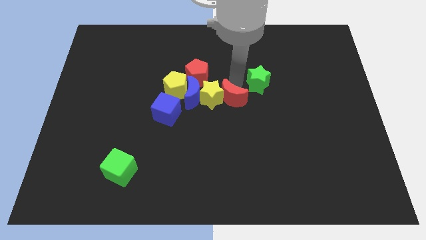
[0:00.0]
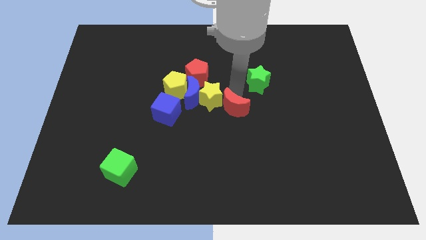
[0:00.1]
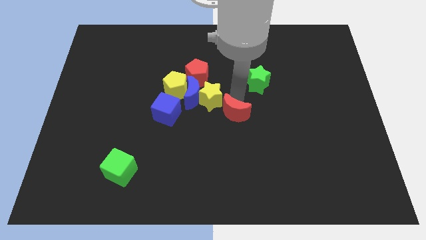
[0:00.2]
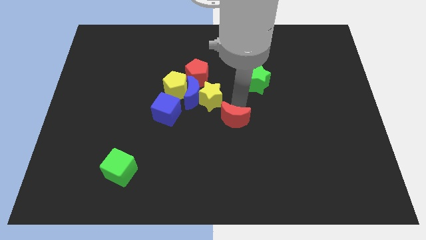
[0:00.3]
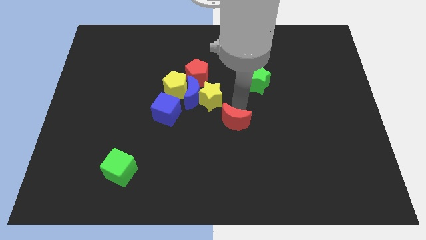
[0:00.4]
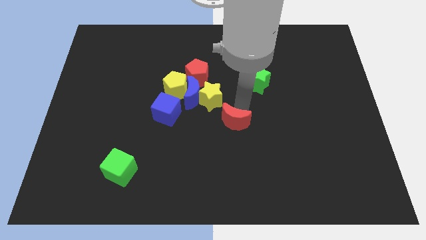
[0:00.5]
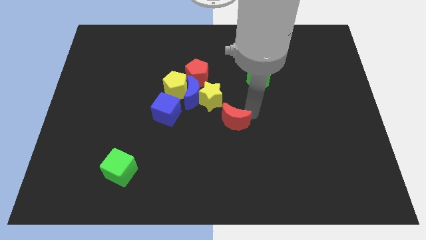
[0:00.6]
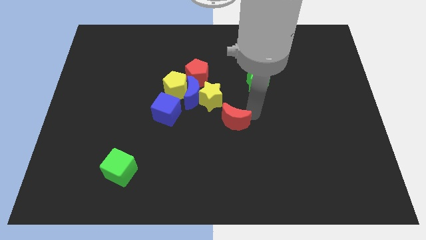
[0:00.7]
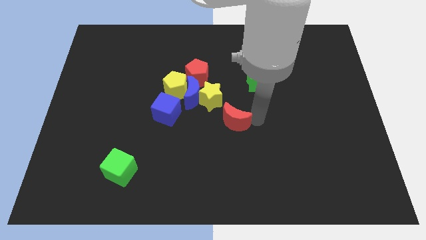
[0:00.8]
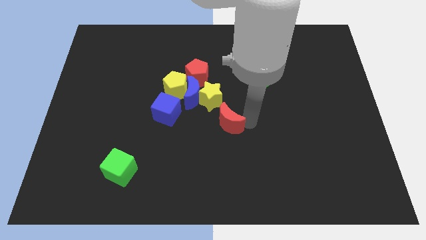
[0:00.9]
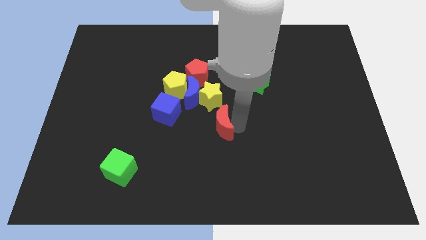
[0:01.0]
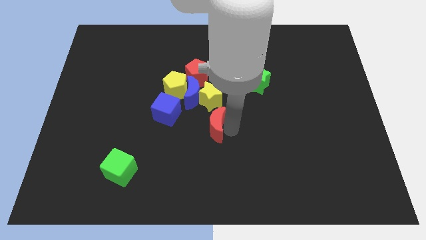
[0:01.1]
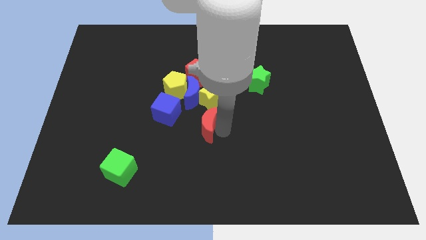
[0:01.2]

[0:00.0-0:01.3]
move the red moon to the bottom side of the yellow star

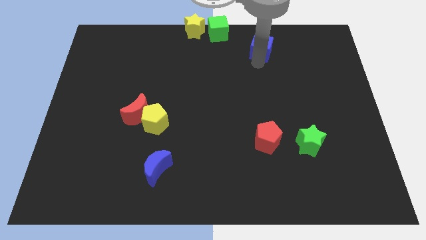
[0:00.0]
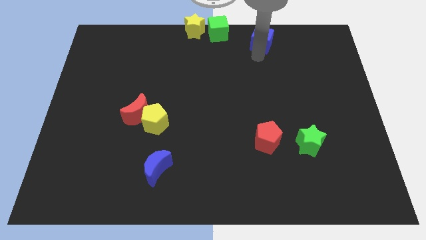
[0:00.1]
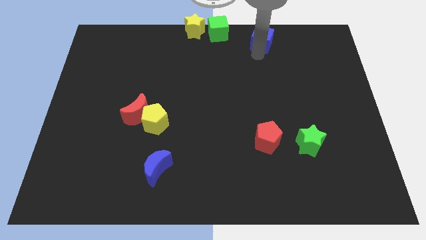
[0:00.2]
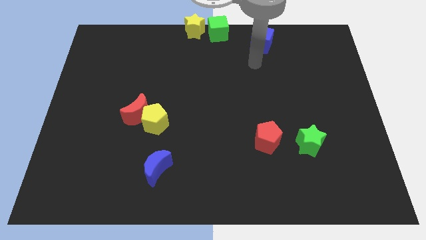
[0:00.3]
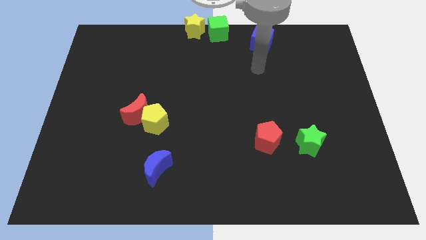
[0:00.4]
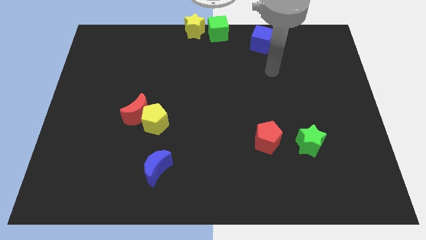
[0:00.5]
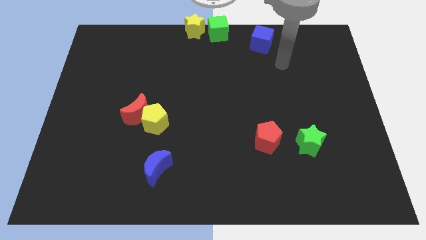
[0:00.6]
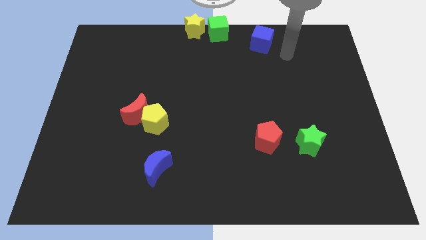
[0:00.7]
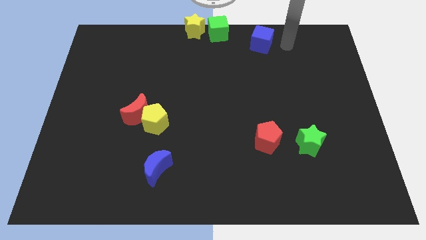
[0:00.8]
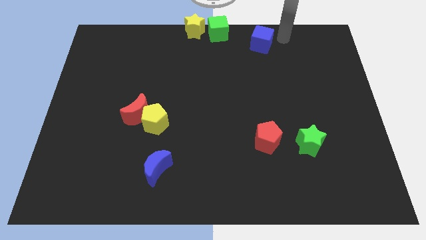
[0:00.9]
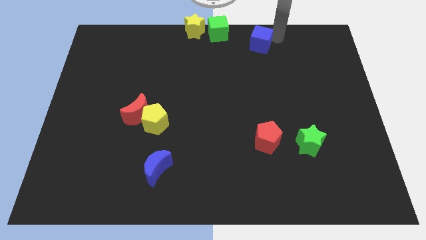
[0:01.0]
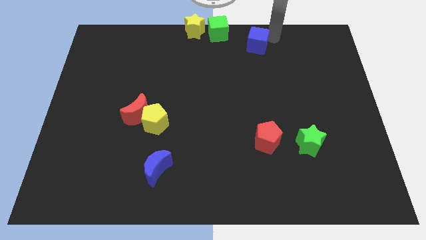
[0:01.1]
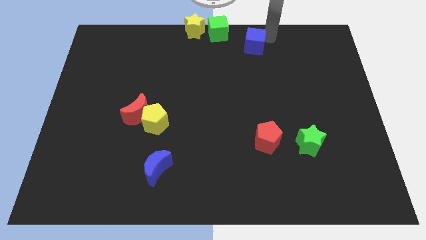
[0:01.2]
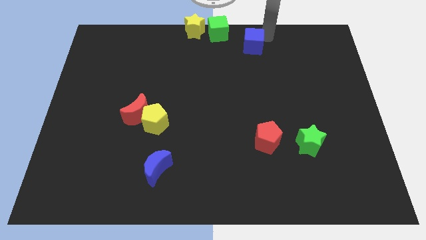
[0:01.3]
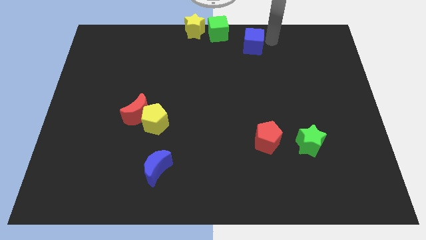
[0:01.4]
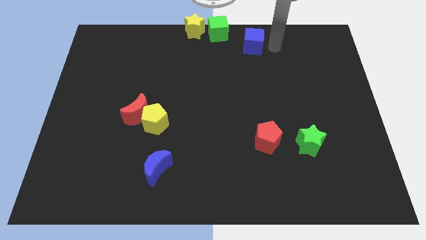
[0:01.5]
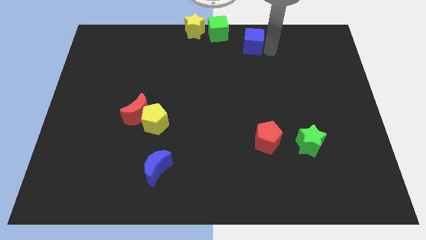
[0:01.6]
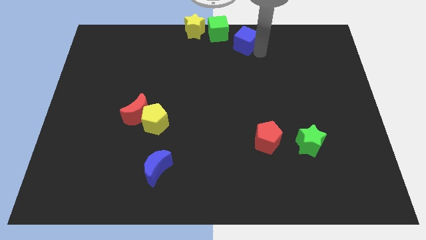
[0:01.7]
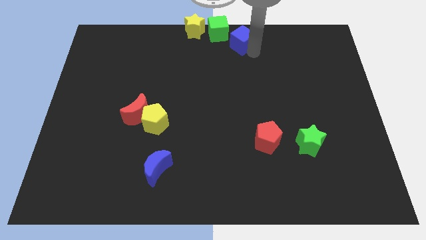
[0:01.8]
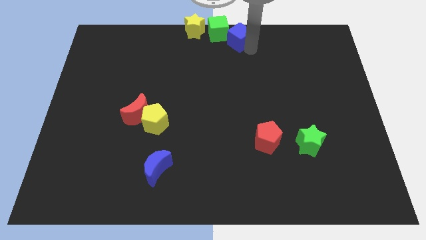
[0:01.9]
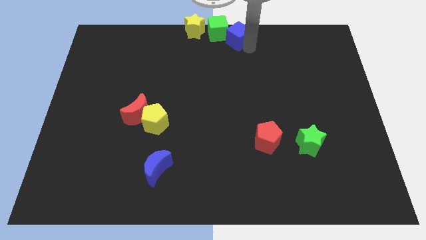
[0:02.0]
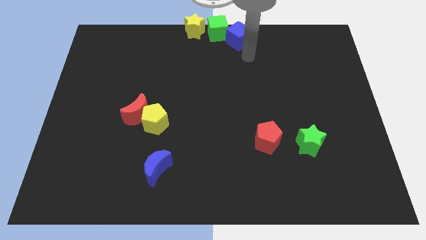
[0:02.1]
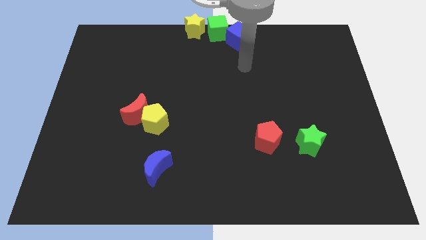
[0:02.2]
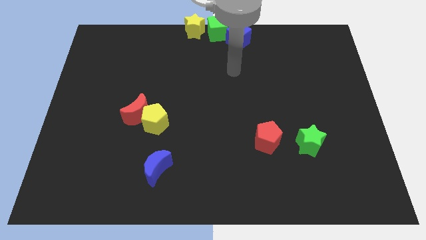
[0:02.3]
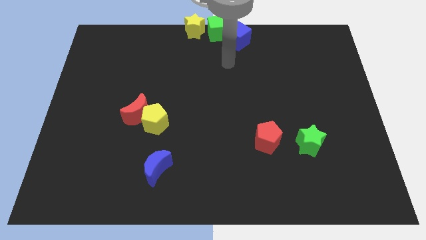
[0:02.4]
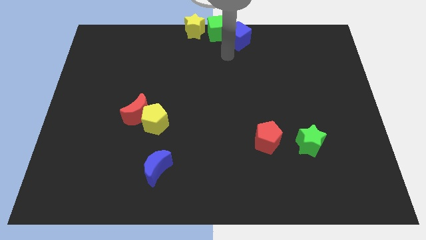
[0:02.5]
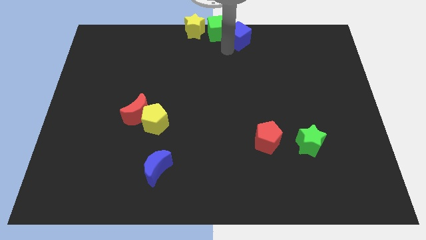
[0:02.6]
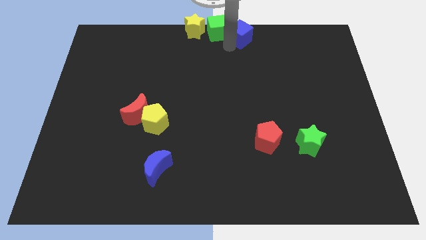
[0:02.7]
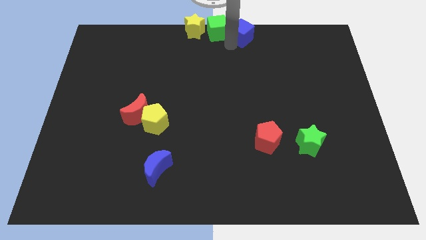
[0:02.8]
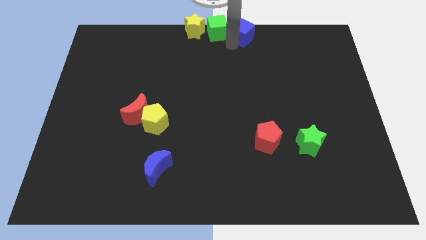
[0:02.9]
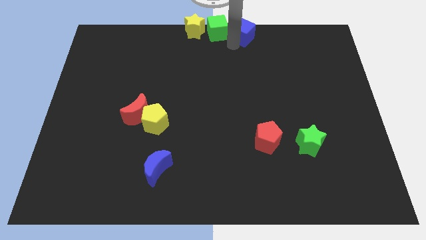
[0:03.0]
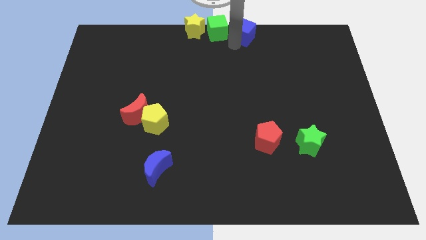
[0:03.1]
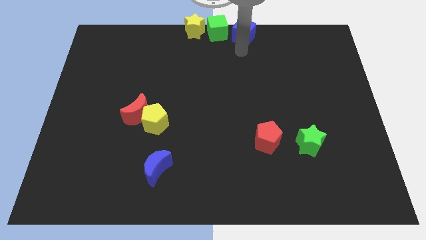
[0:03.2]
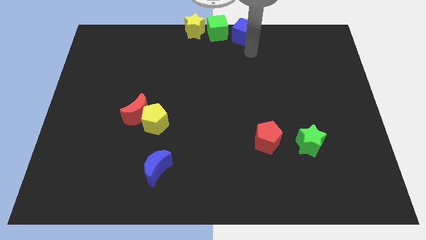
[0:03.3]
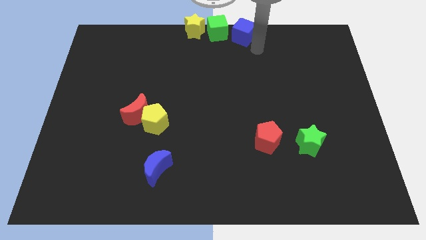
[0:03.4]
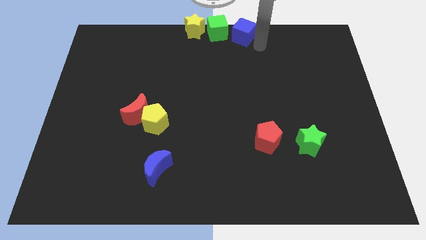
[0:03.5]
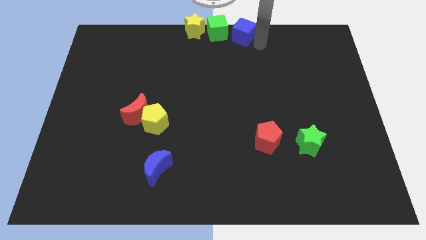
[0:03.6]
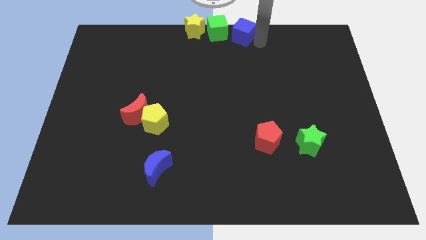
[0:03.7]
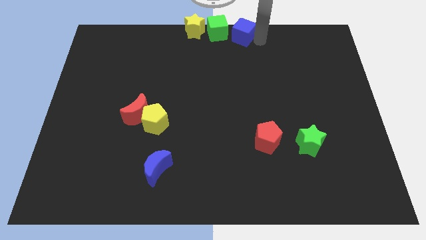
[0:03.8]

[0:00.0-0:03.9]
place blue cube to the right of green cube

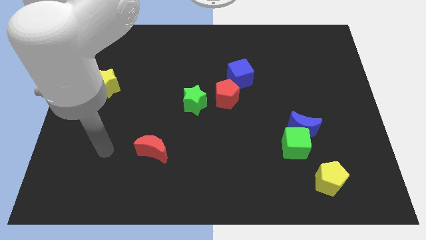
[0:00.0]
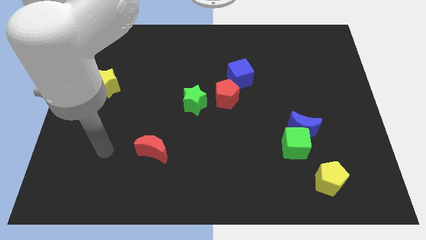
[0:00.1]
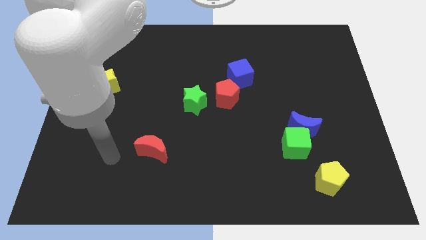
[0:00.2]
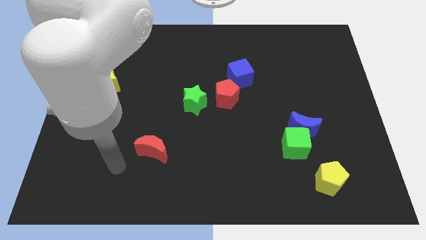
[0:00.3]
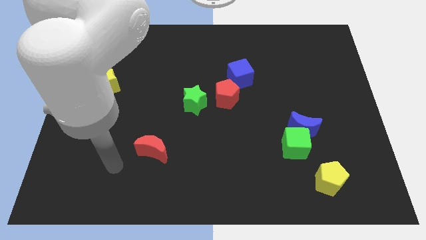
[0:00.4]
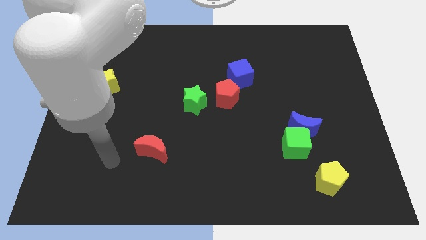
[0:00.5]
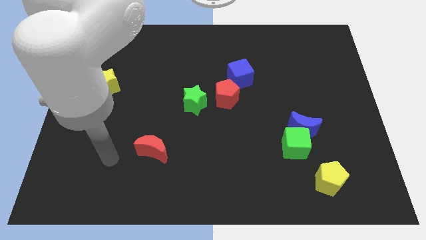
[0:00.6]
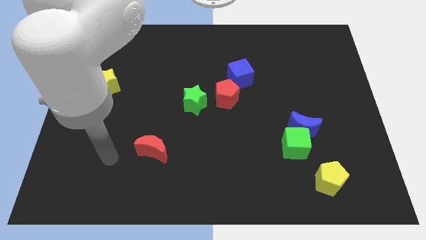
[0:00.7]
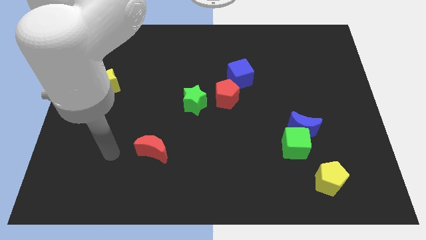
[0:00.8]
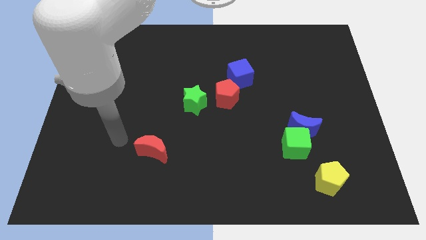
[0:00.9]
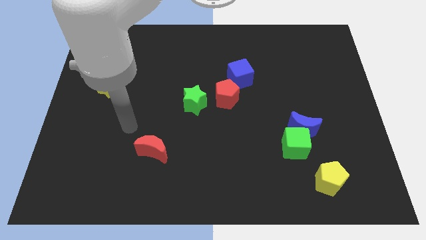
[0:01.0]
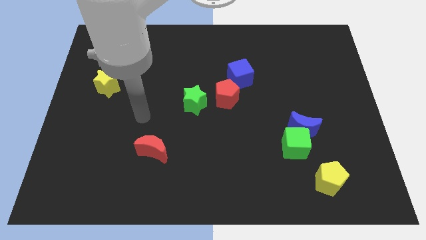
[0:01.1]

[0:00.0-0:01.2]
point your arm at the top left of the red crescent

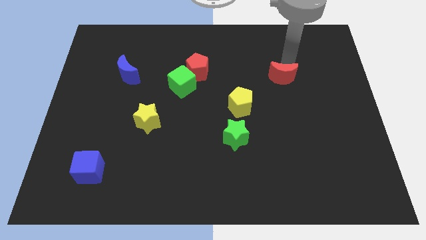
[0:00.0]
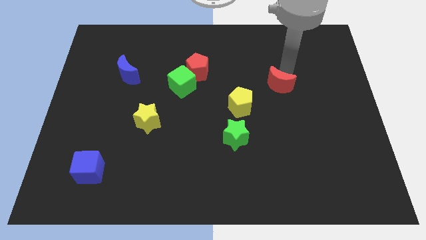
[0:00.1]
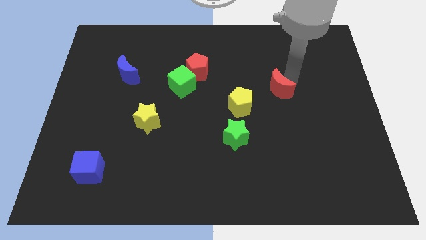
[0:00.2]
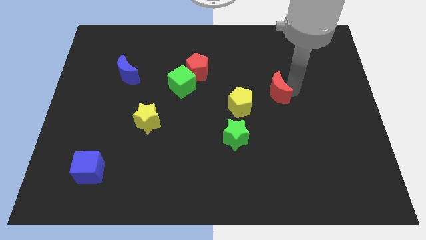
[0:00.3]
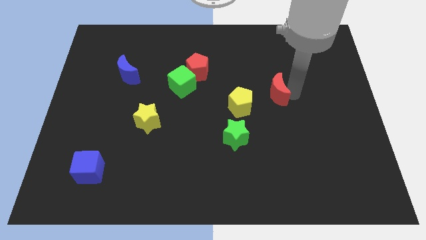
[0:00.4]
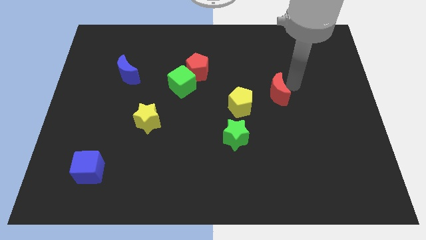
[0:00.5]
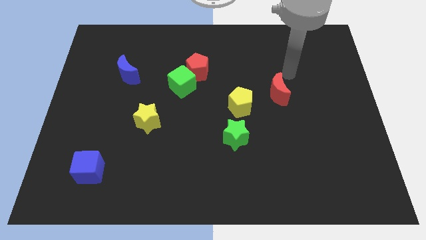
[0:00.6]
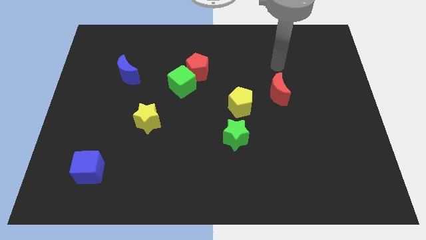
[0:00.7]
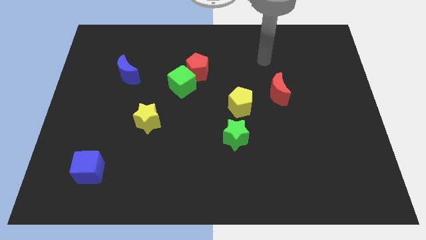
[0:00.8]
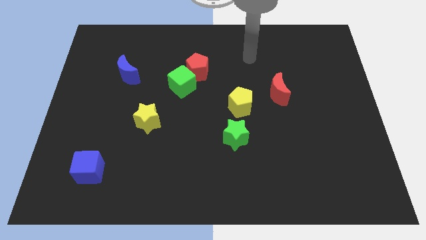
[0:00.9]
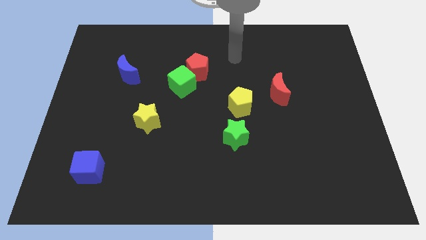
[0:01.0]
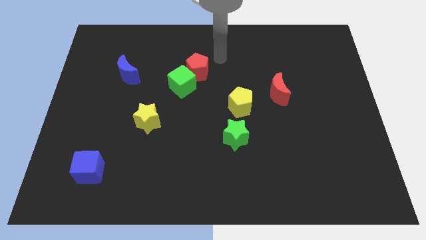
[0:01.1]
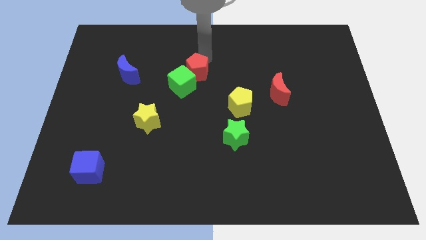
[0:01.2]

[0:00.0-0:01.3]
slide the red moon slightly to the bottom

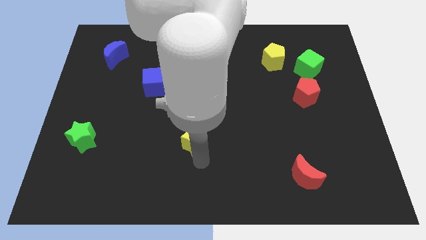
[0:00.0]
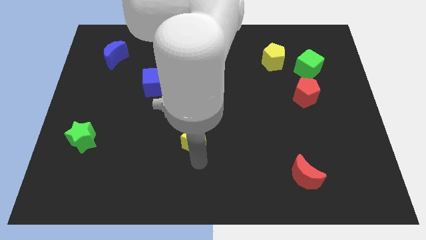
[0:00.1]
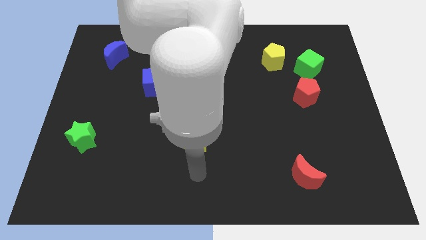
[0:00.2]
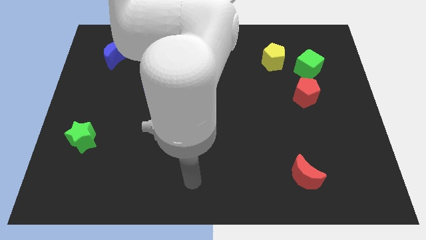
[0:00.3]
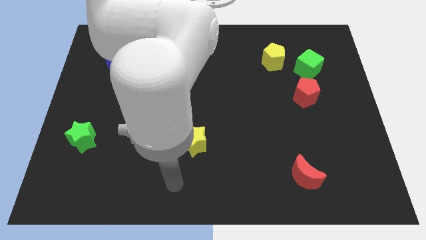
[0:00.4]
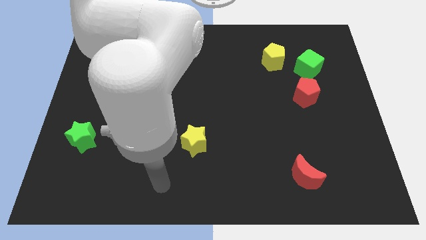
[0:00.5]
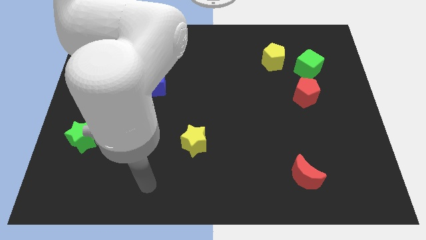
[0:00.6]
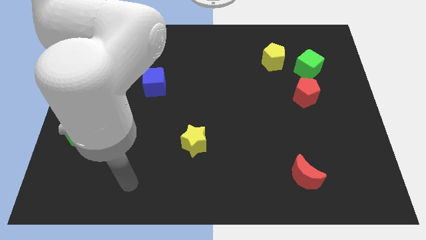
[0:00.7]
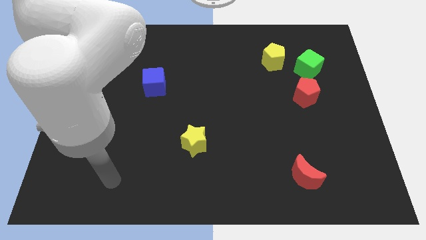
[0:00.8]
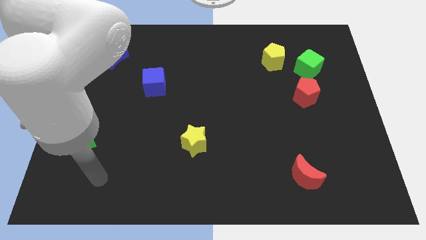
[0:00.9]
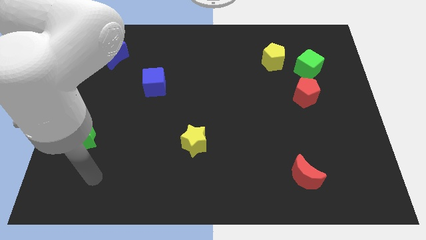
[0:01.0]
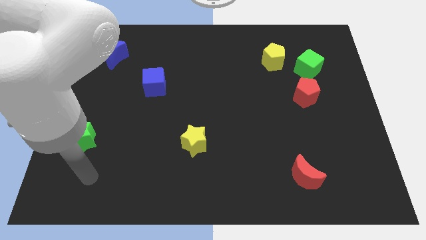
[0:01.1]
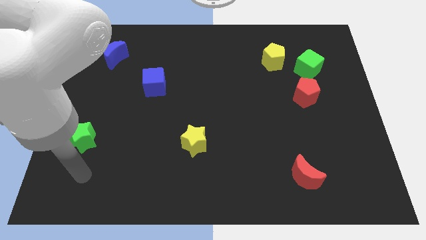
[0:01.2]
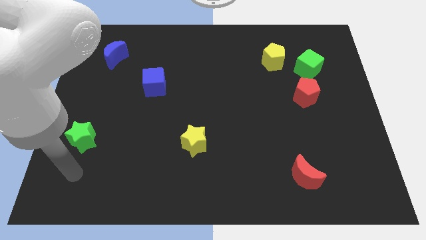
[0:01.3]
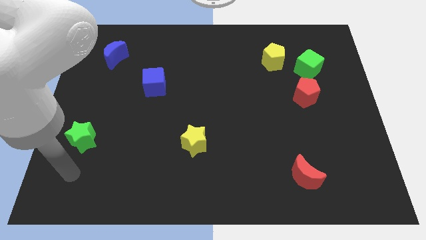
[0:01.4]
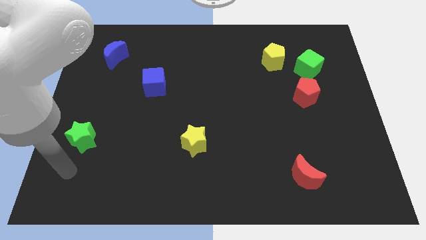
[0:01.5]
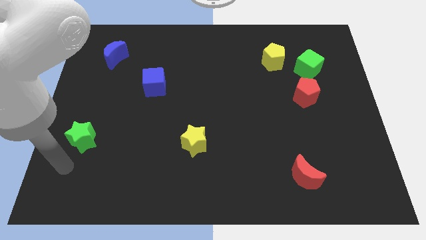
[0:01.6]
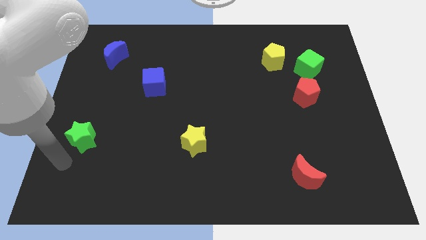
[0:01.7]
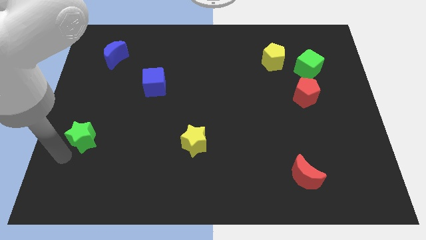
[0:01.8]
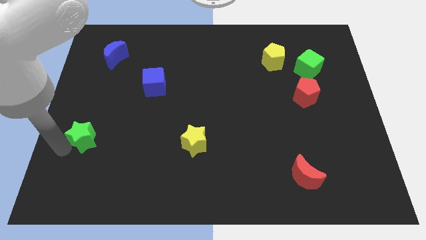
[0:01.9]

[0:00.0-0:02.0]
move your arm from yellow star to green star
